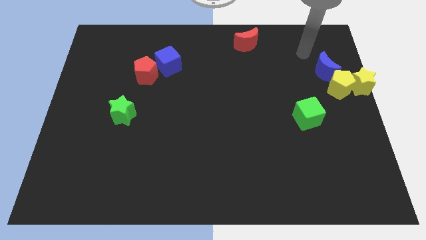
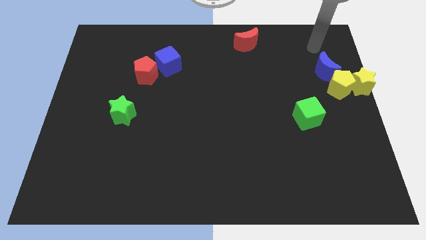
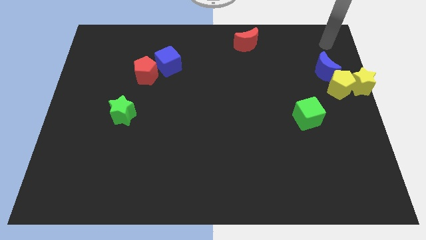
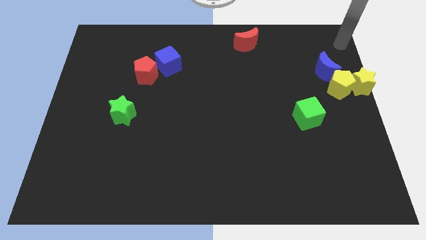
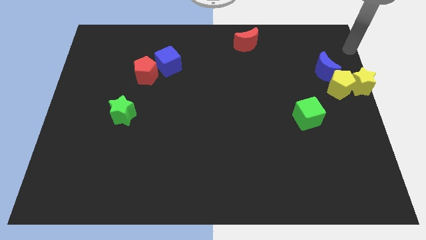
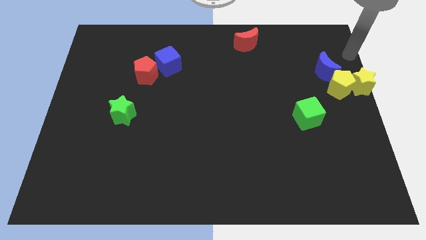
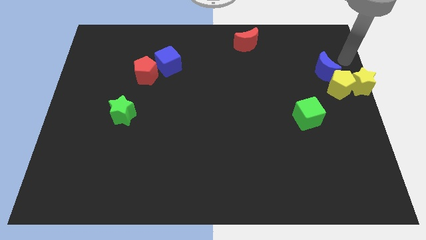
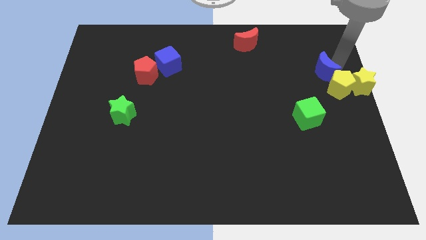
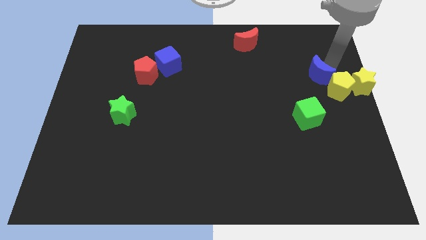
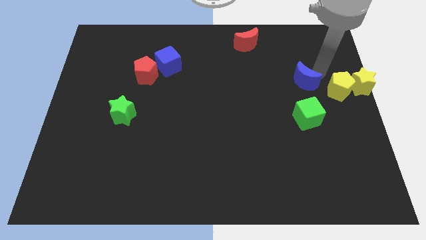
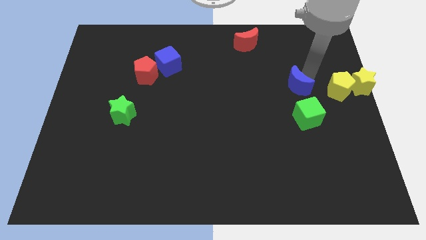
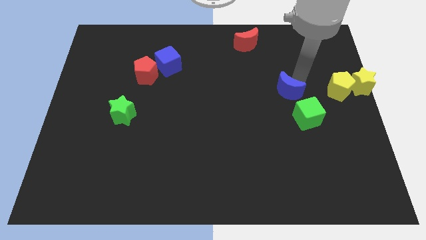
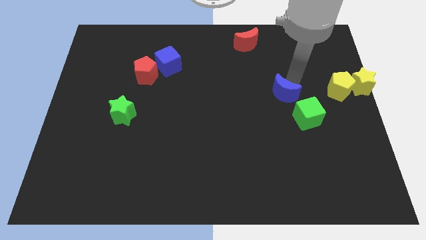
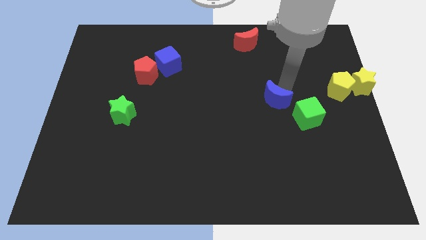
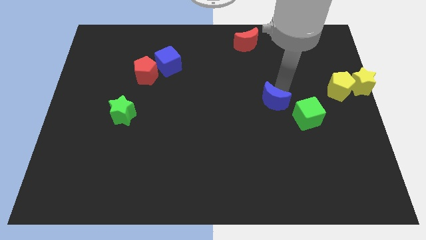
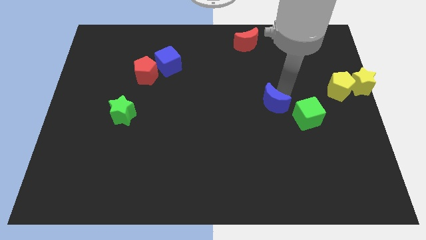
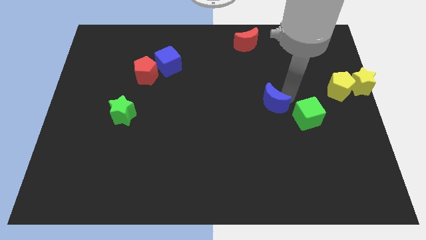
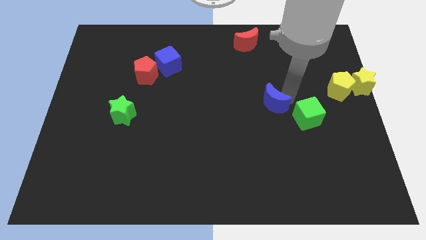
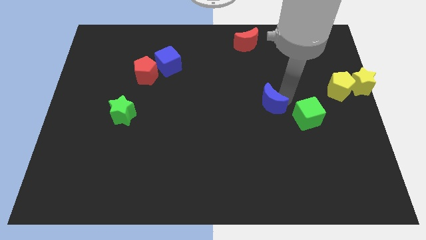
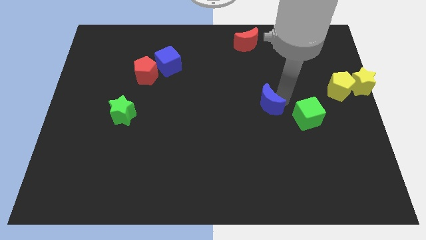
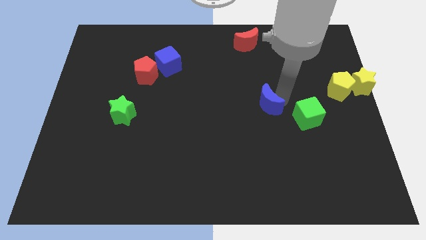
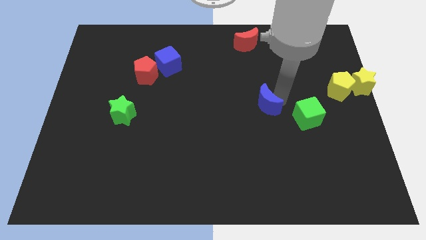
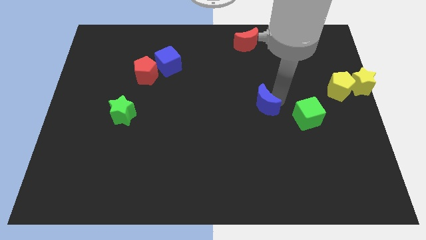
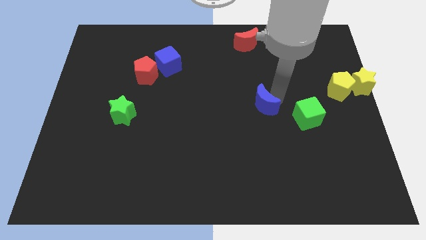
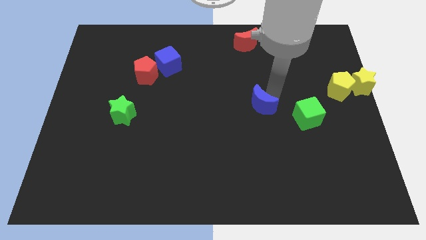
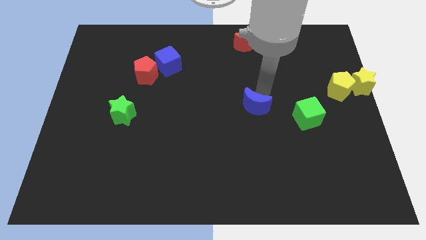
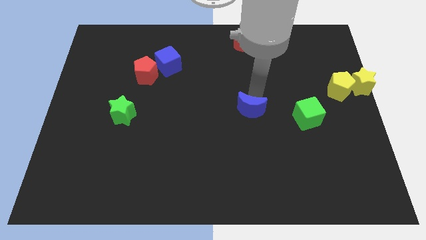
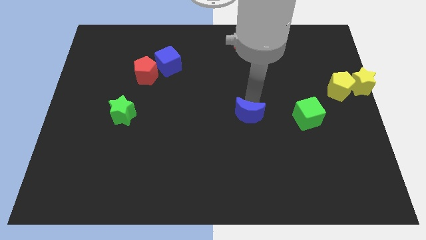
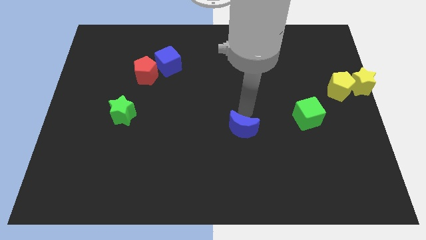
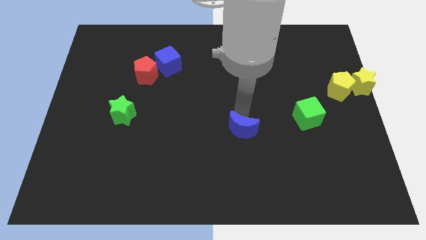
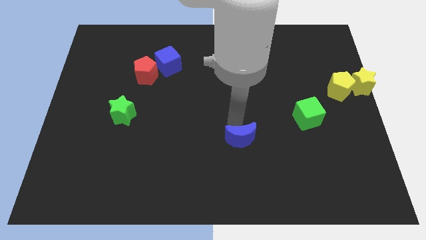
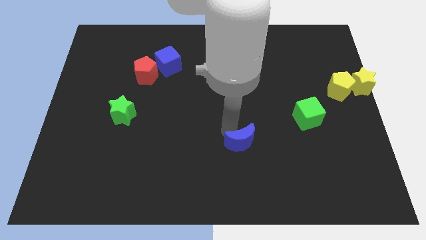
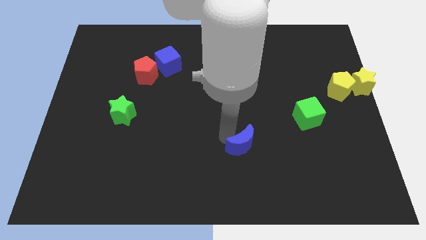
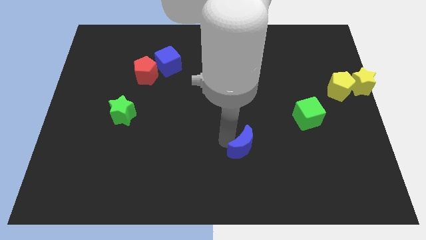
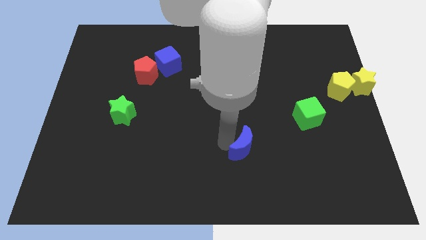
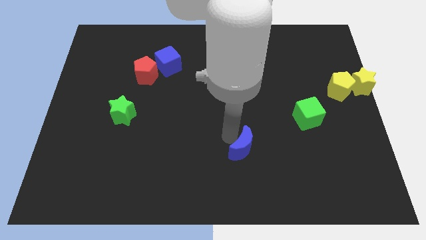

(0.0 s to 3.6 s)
push the blue crescent towards the bottom

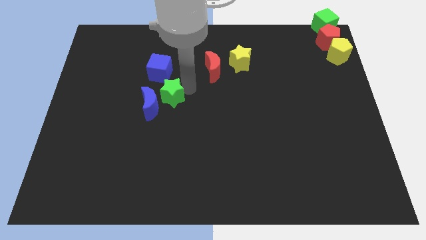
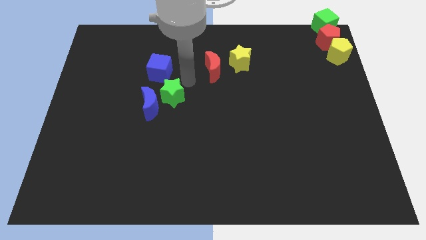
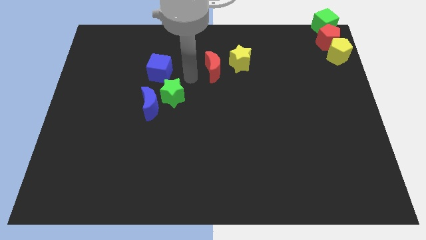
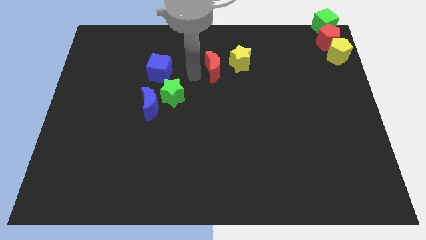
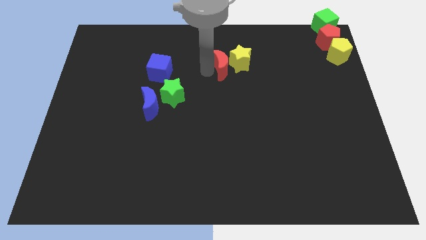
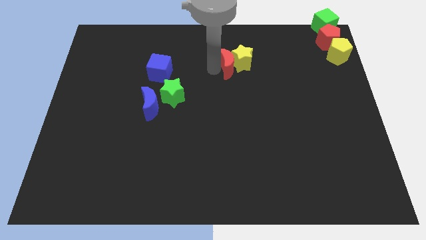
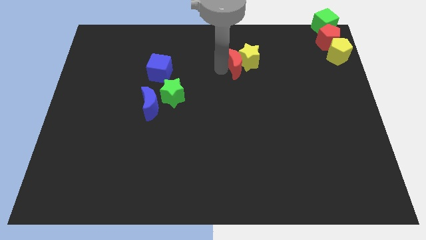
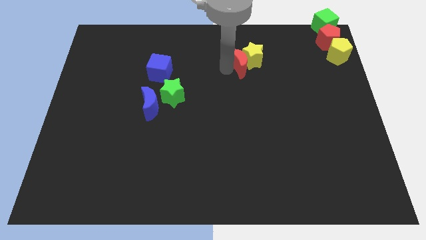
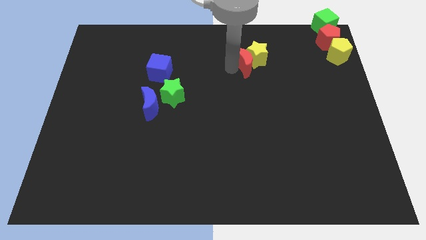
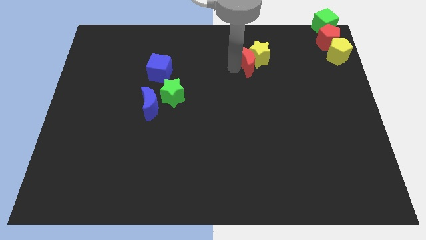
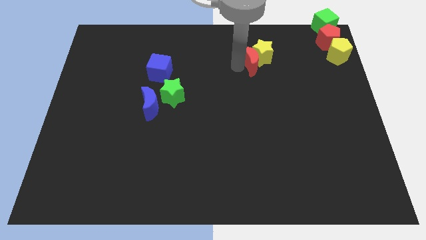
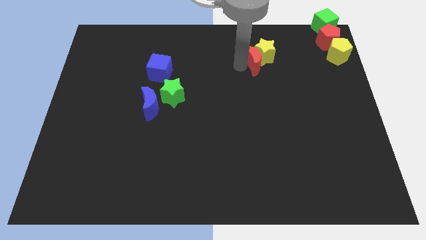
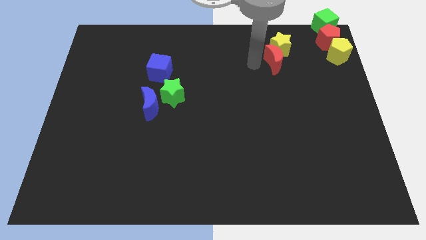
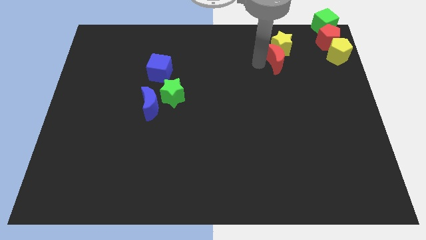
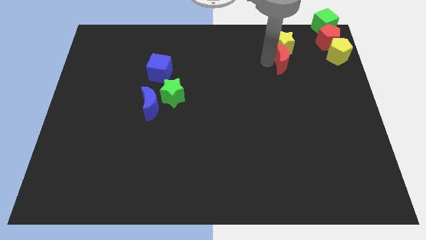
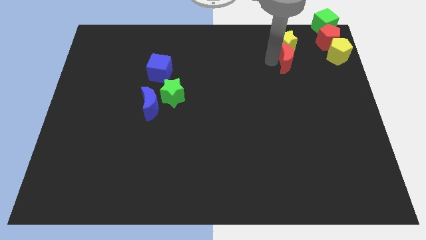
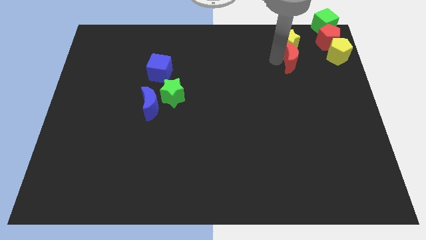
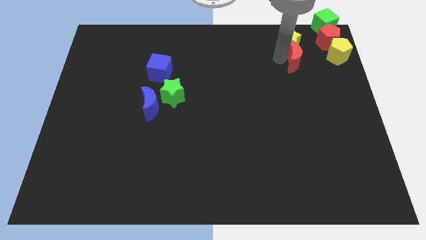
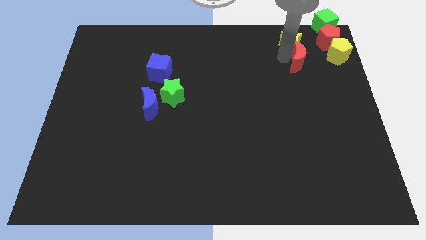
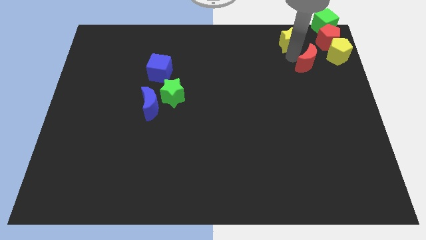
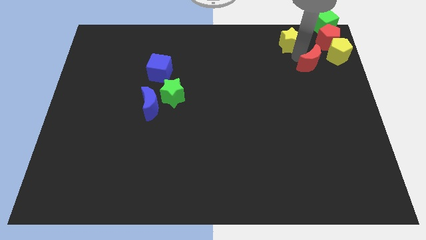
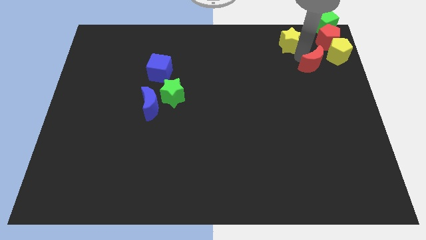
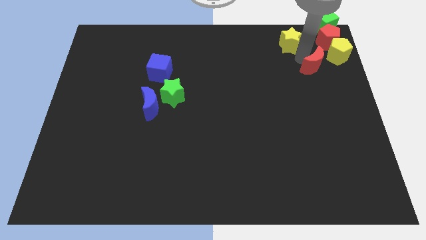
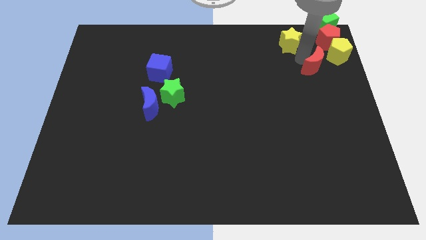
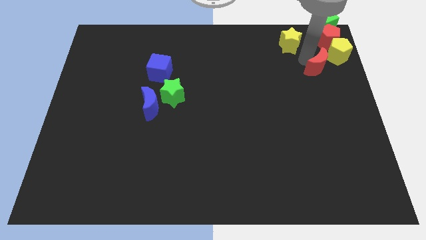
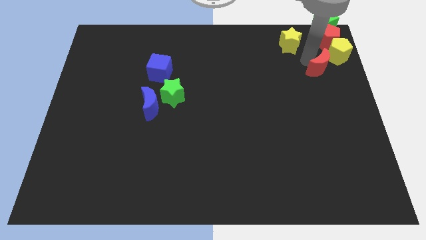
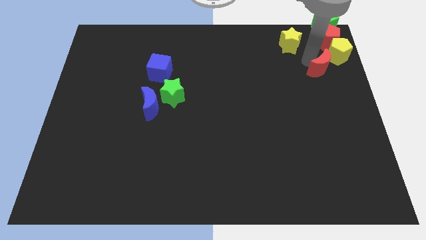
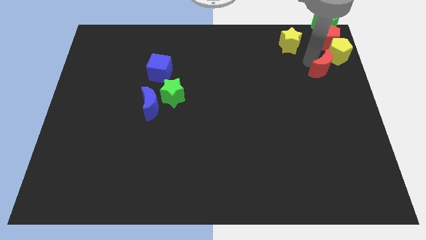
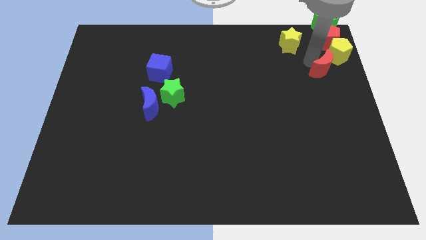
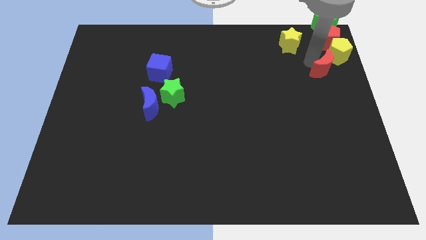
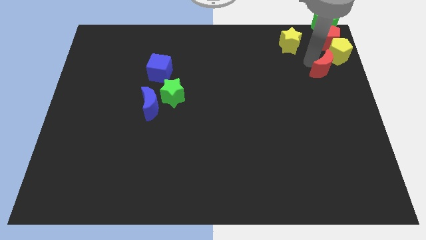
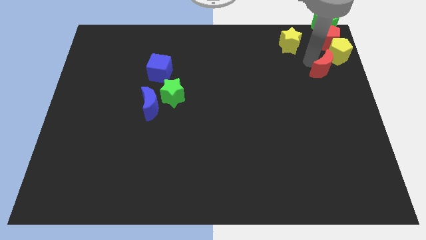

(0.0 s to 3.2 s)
place red crescent near yellow pentagon

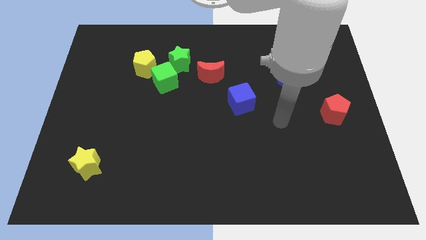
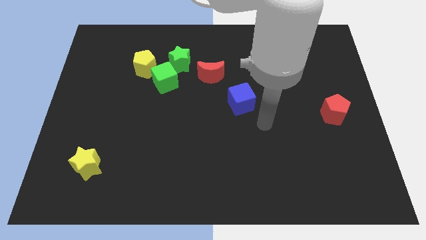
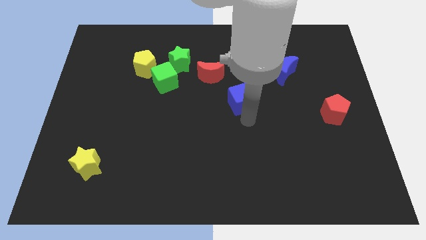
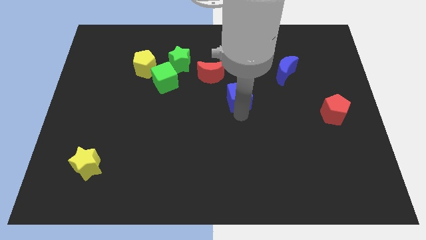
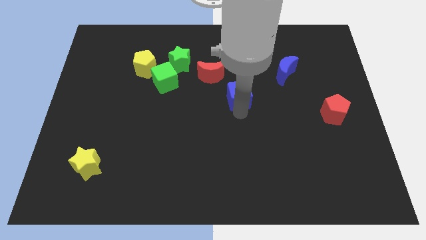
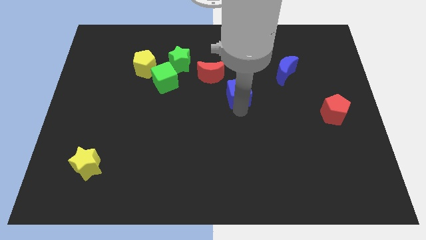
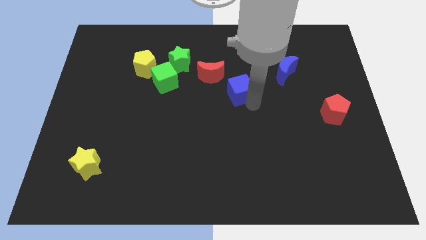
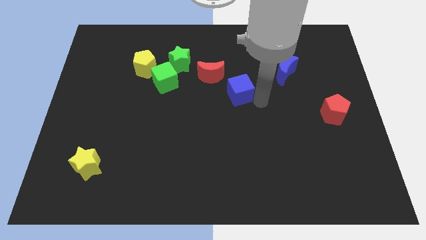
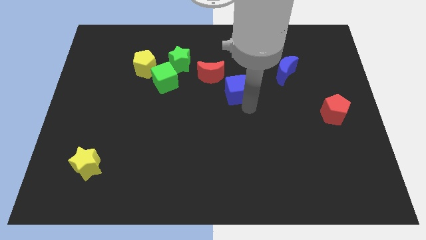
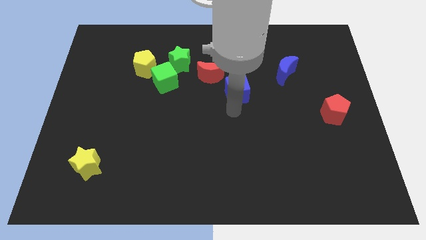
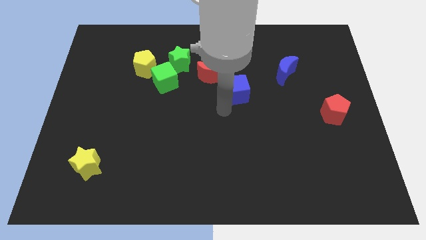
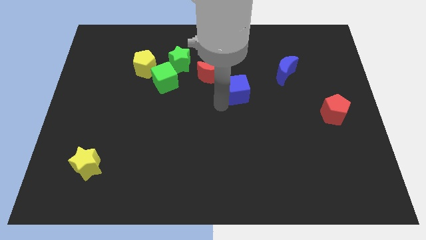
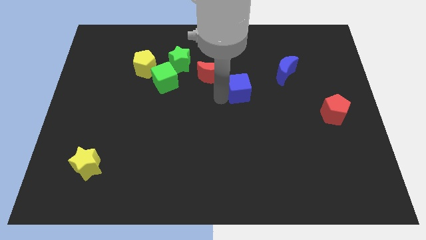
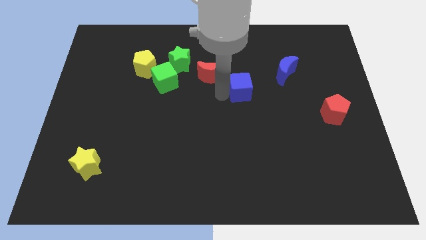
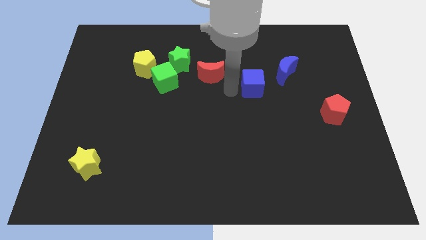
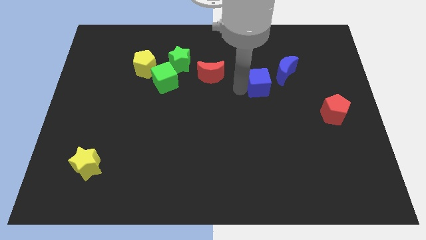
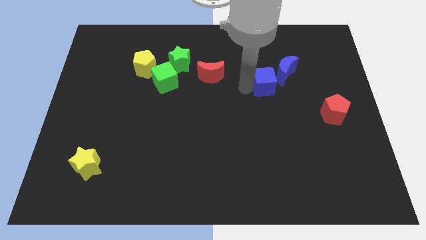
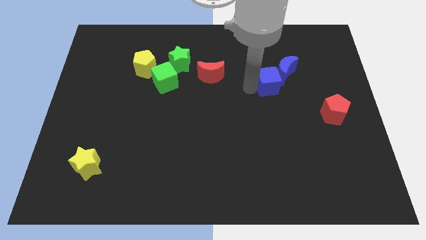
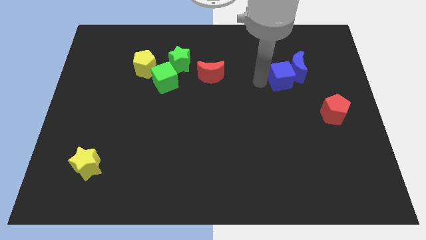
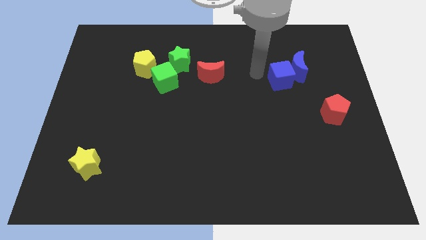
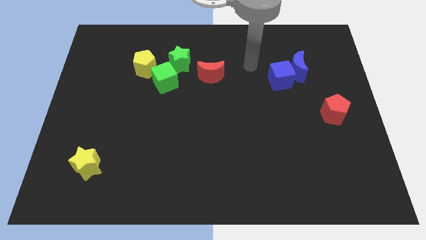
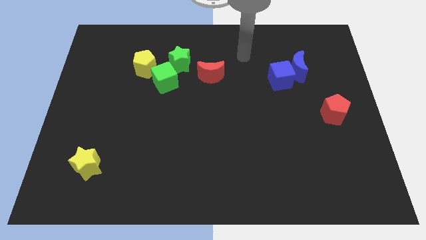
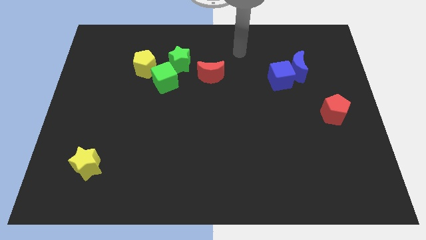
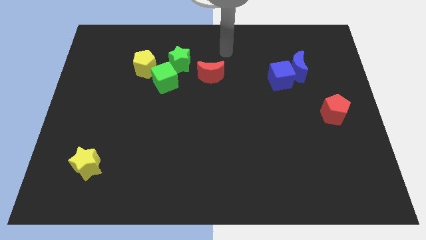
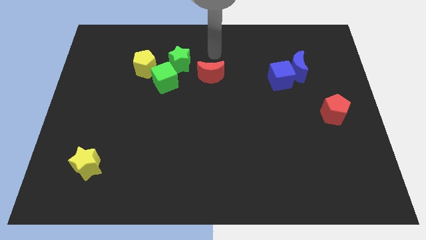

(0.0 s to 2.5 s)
move the blue cube towards the blue moon
